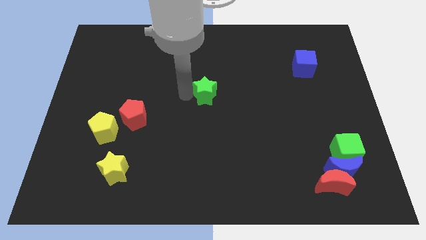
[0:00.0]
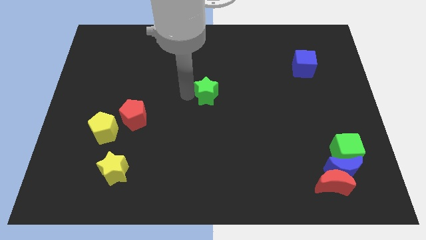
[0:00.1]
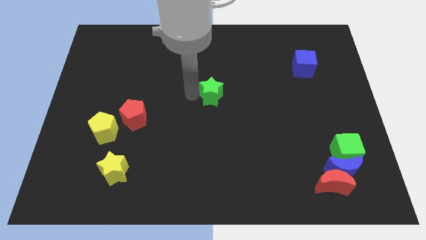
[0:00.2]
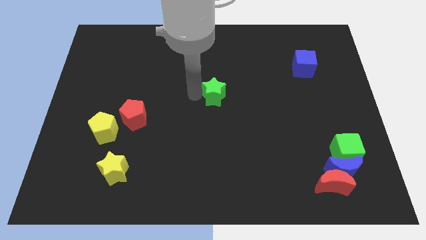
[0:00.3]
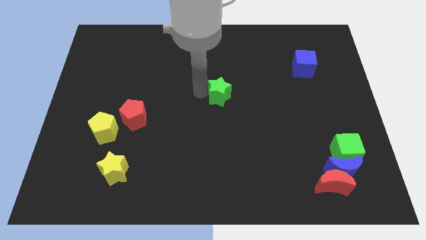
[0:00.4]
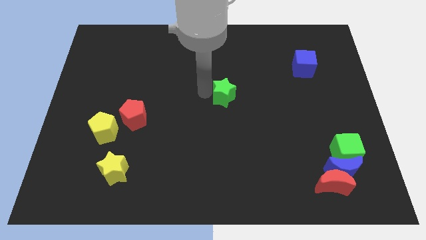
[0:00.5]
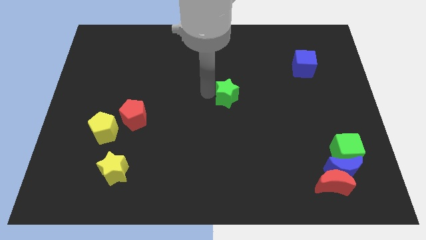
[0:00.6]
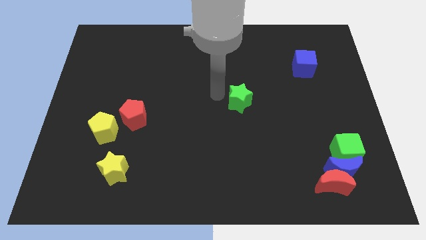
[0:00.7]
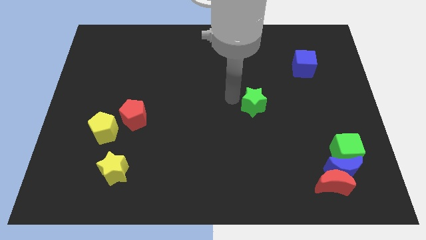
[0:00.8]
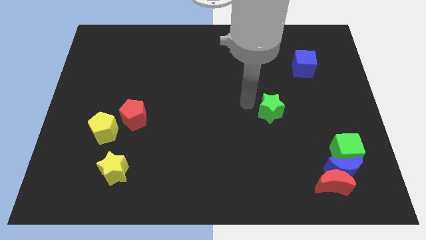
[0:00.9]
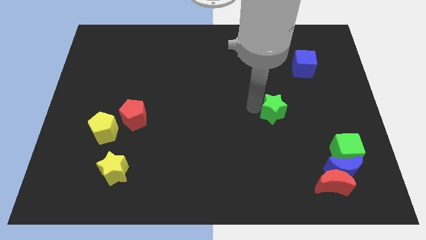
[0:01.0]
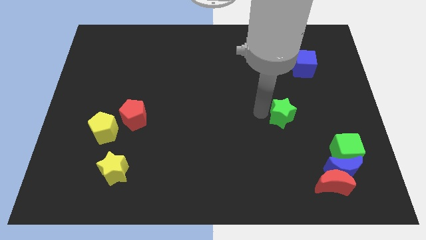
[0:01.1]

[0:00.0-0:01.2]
push the green star towards the green cube

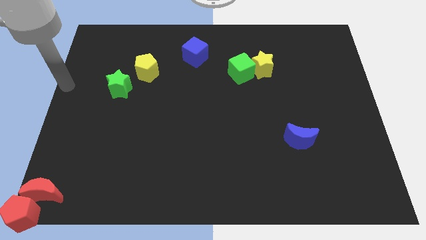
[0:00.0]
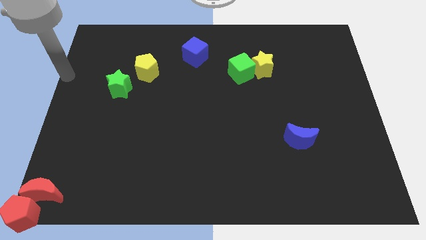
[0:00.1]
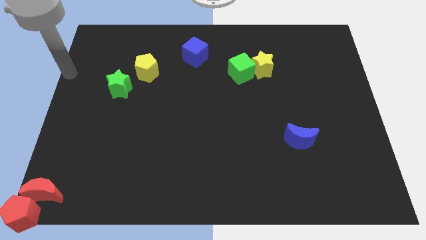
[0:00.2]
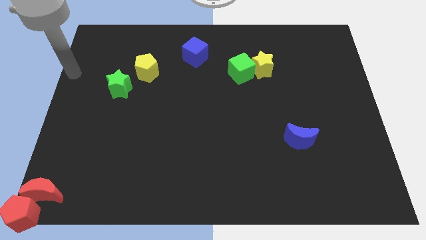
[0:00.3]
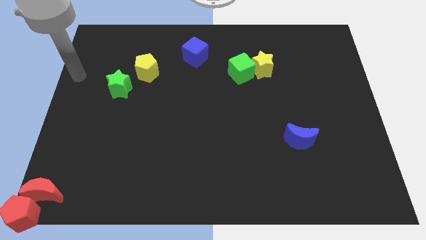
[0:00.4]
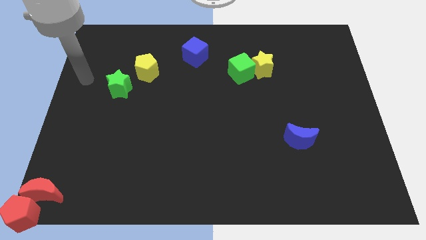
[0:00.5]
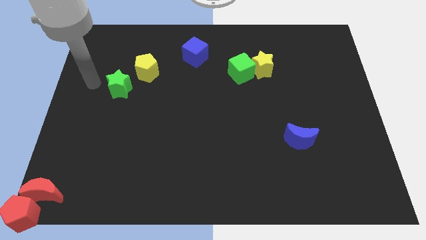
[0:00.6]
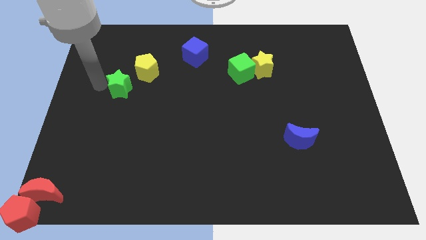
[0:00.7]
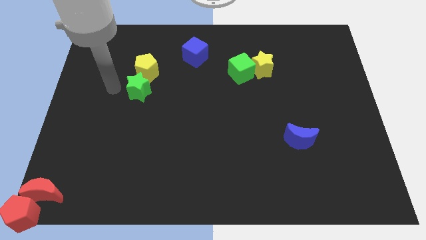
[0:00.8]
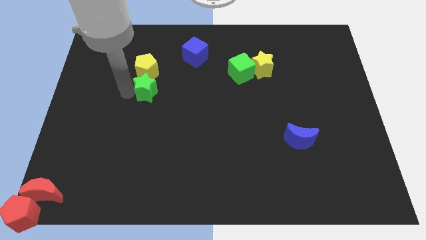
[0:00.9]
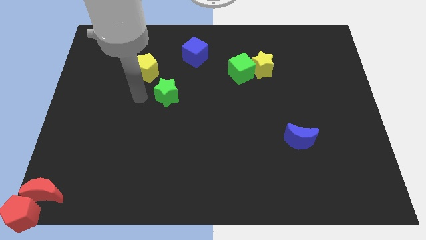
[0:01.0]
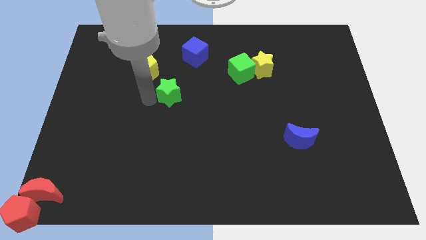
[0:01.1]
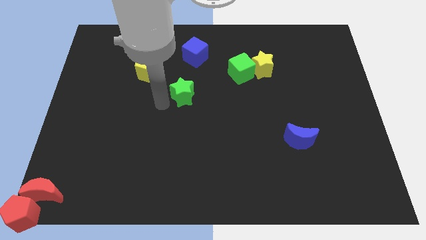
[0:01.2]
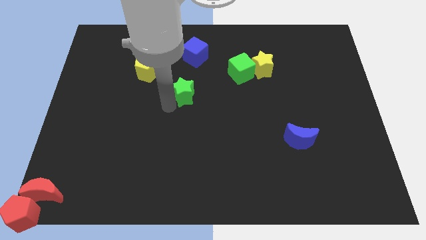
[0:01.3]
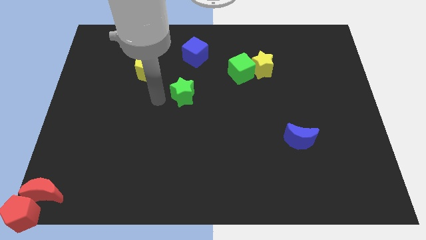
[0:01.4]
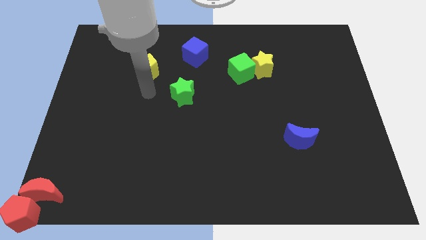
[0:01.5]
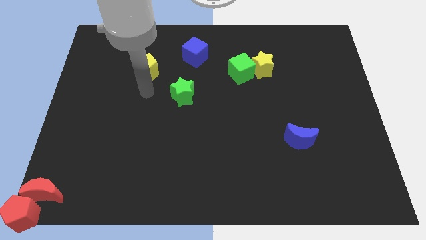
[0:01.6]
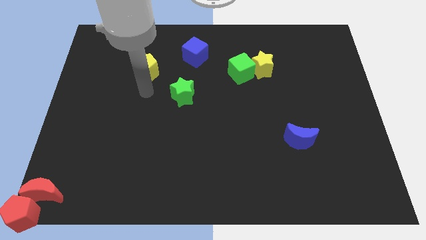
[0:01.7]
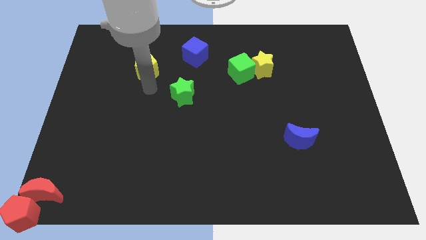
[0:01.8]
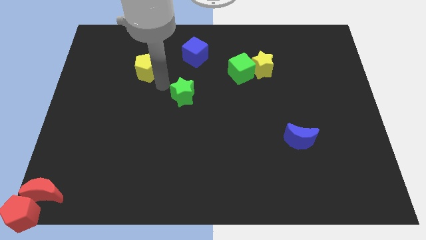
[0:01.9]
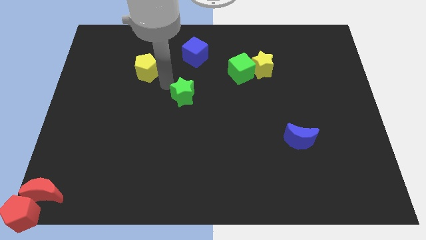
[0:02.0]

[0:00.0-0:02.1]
place green star below blue cube

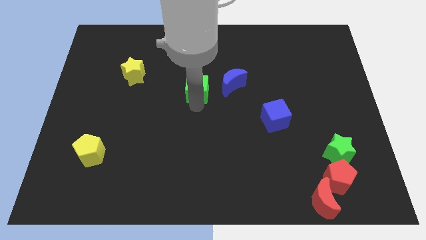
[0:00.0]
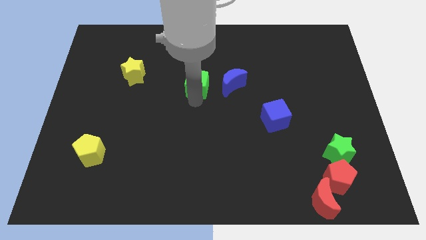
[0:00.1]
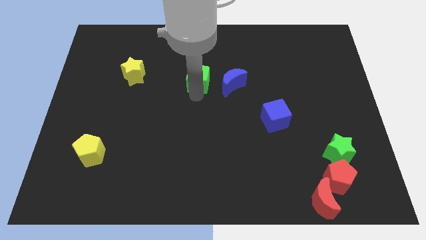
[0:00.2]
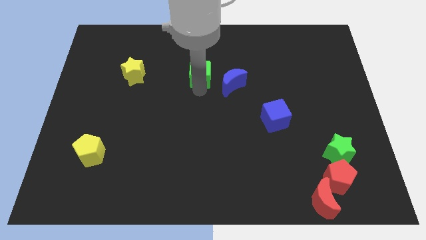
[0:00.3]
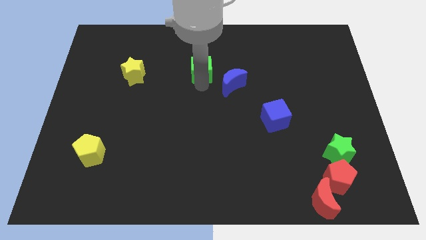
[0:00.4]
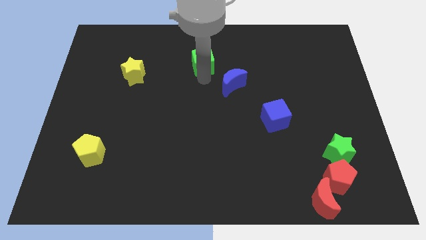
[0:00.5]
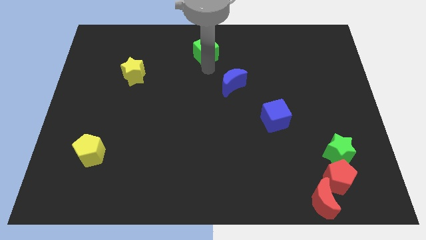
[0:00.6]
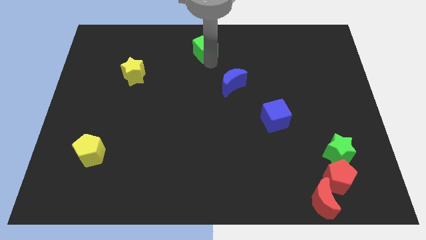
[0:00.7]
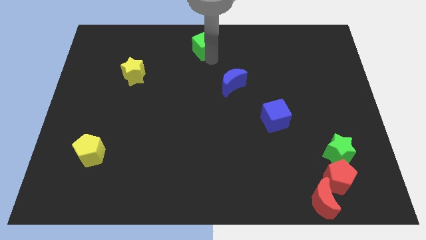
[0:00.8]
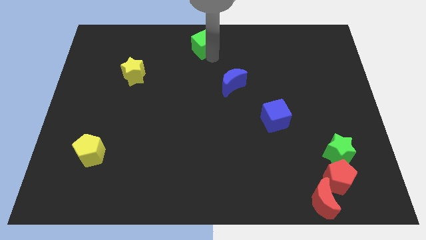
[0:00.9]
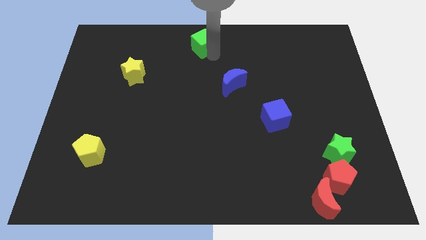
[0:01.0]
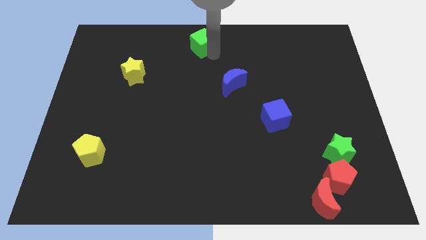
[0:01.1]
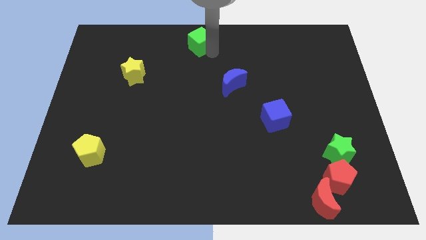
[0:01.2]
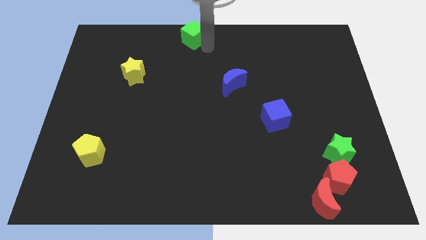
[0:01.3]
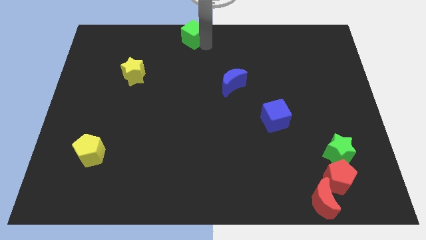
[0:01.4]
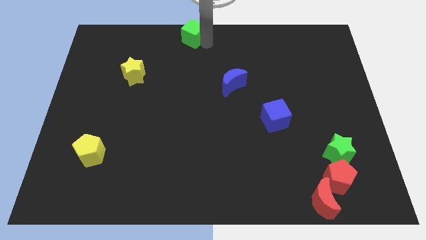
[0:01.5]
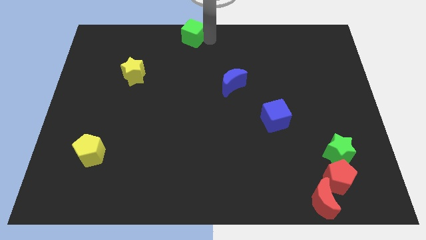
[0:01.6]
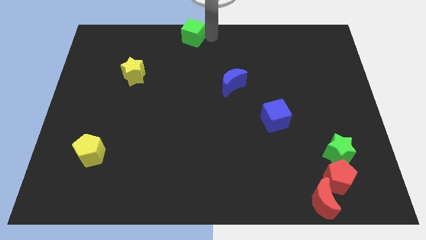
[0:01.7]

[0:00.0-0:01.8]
slide the green cube to the top side of the table

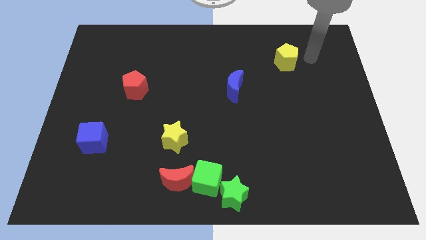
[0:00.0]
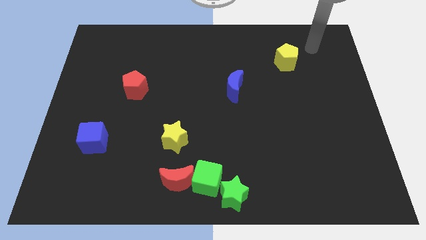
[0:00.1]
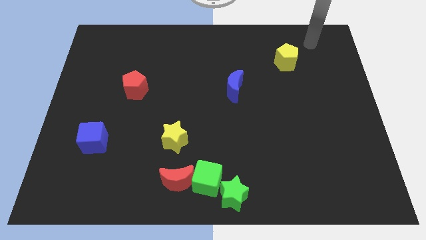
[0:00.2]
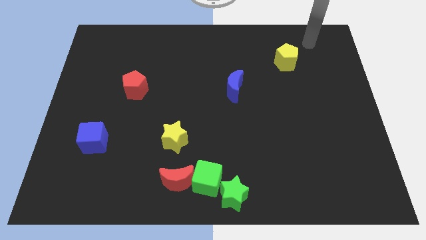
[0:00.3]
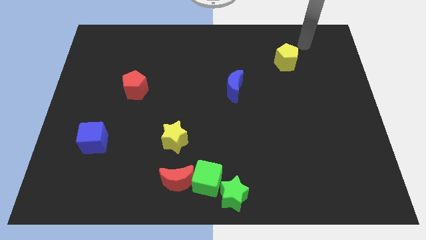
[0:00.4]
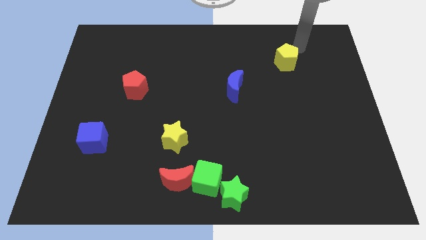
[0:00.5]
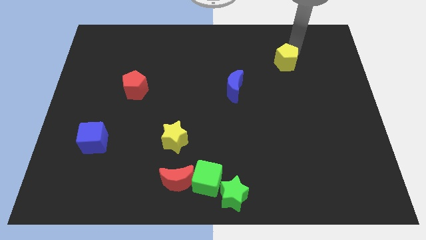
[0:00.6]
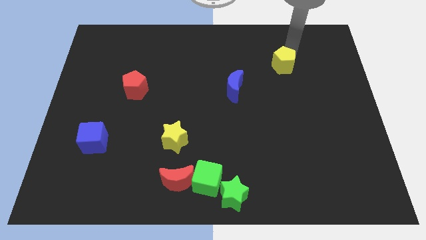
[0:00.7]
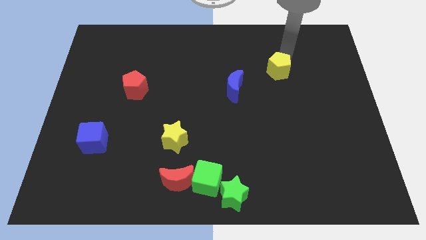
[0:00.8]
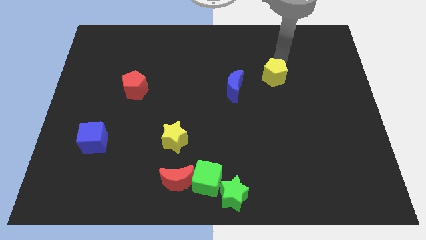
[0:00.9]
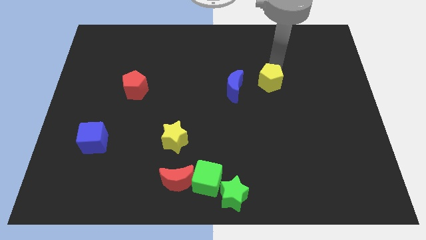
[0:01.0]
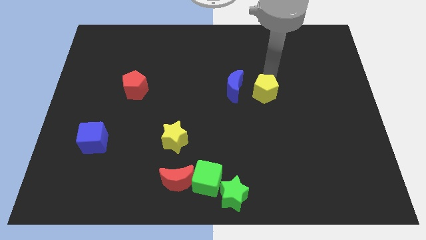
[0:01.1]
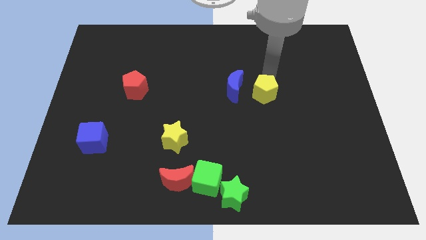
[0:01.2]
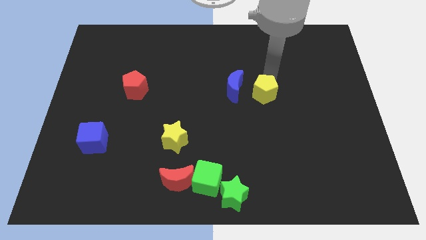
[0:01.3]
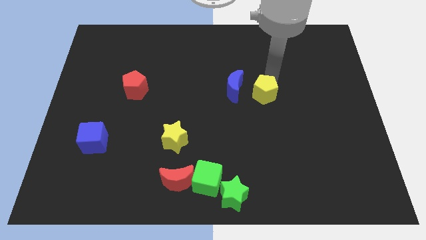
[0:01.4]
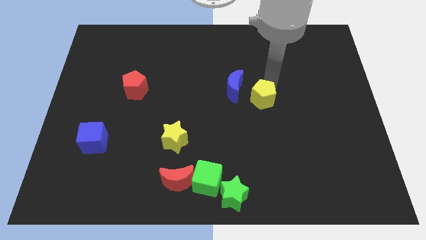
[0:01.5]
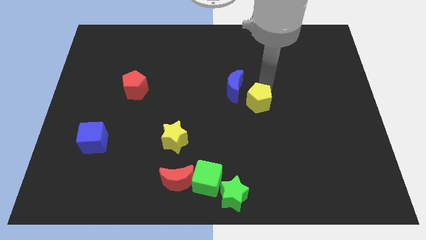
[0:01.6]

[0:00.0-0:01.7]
move the yellow pentagon towards down

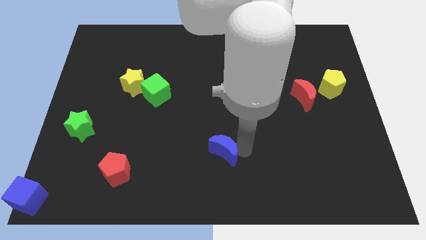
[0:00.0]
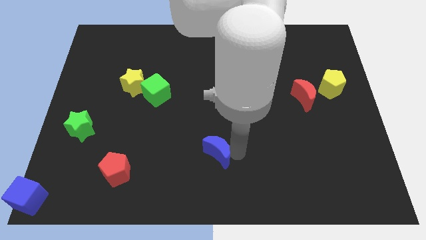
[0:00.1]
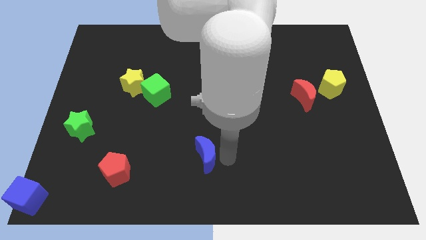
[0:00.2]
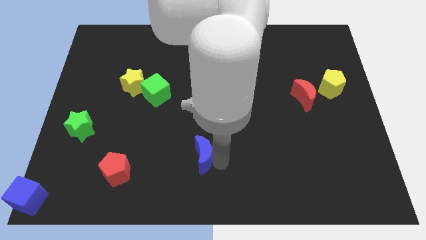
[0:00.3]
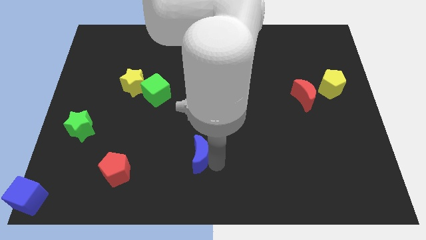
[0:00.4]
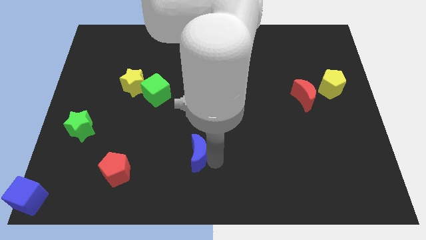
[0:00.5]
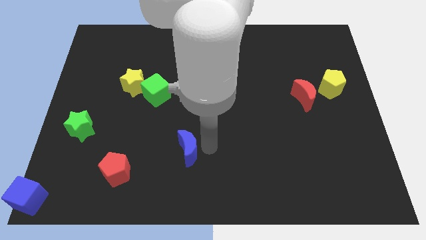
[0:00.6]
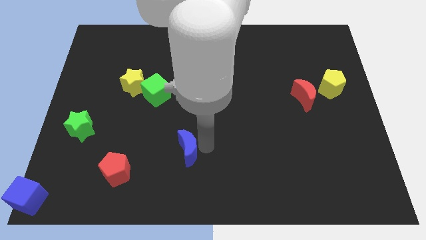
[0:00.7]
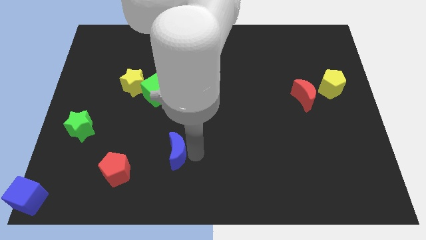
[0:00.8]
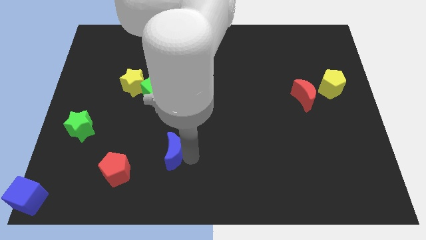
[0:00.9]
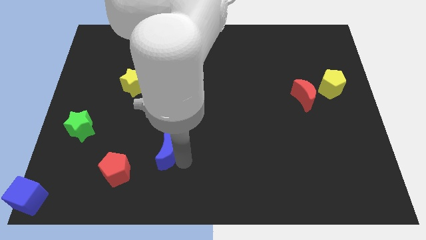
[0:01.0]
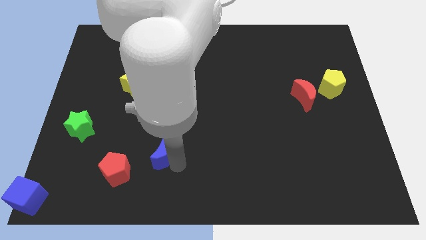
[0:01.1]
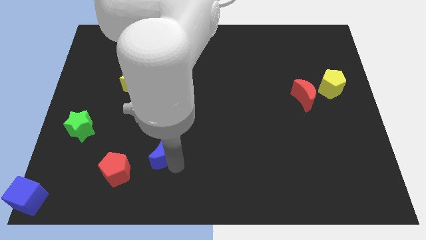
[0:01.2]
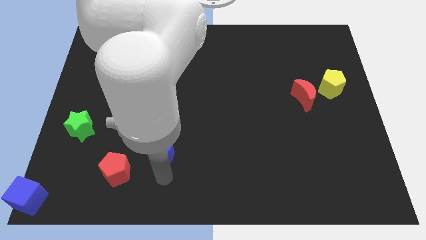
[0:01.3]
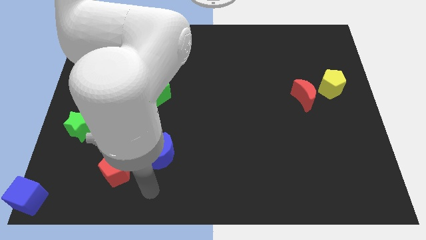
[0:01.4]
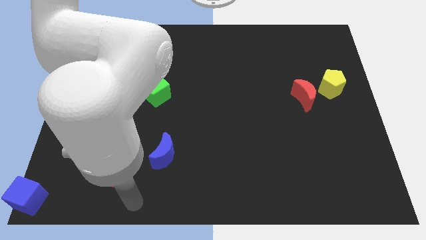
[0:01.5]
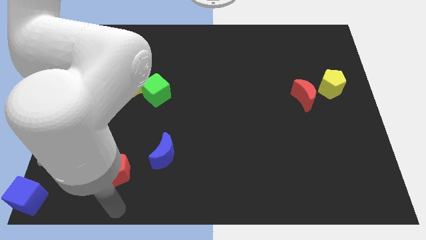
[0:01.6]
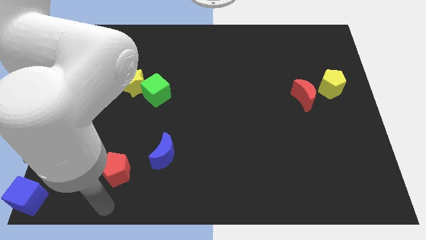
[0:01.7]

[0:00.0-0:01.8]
move the blue cube to the top right of the red pentagon

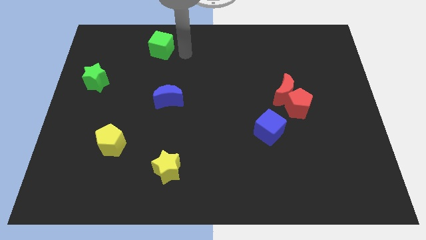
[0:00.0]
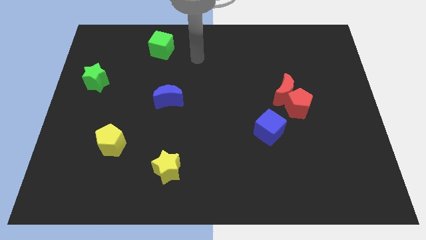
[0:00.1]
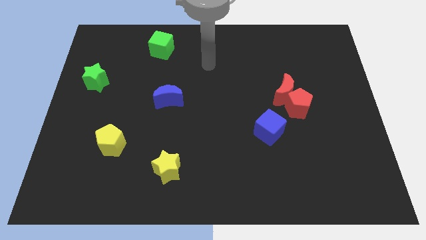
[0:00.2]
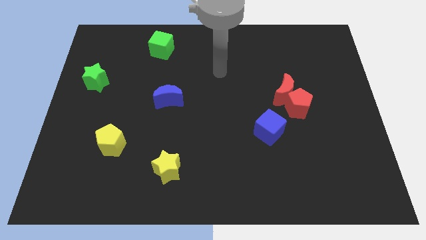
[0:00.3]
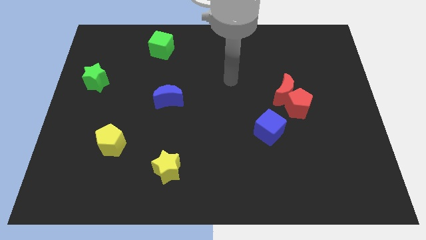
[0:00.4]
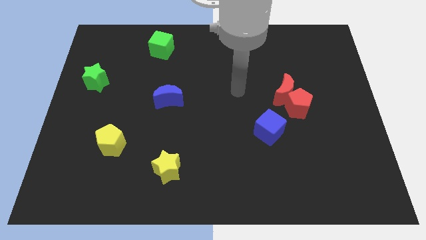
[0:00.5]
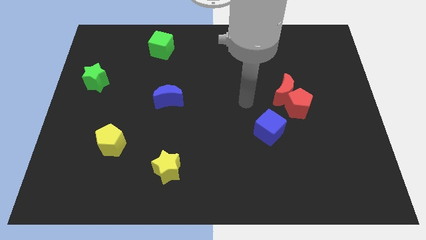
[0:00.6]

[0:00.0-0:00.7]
point the arm to the left of the red moon
